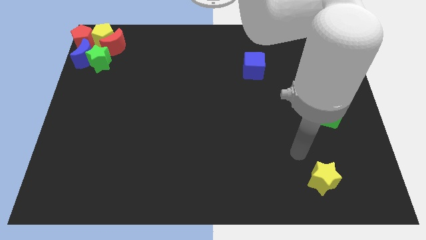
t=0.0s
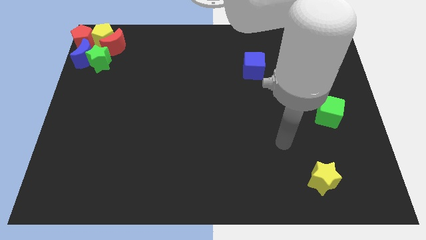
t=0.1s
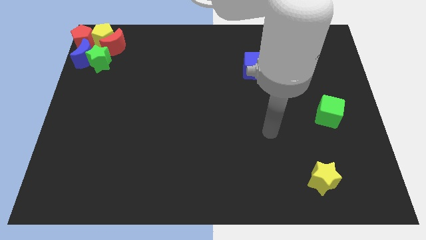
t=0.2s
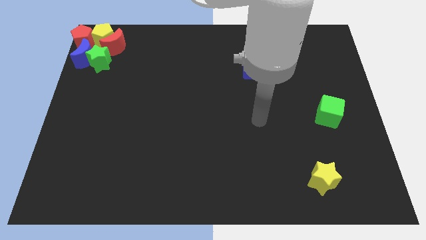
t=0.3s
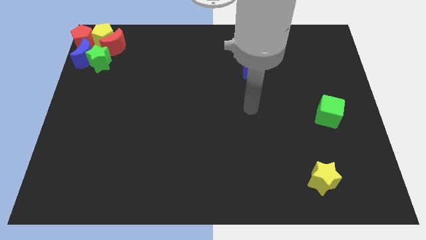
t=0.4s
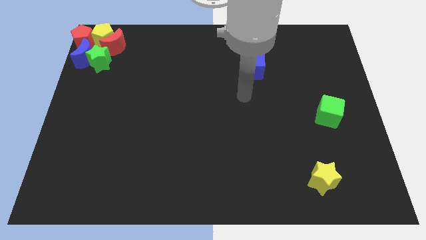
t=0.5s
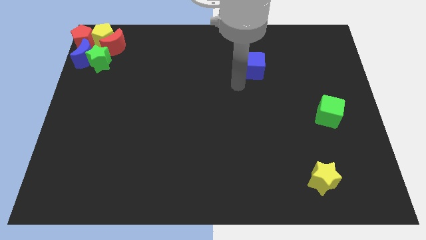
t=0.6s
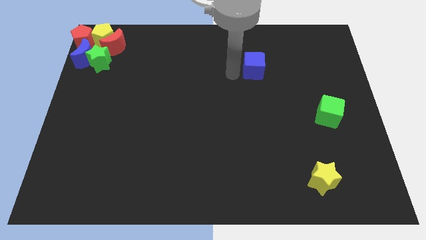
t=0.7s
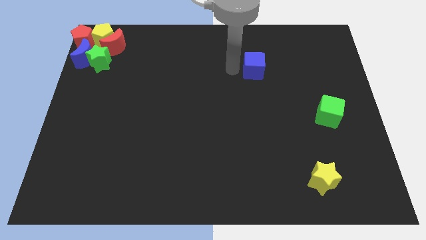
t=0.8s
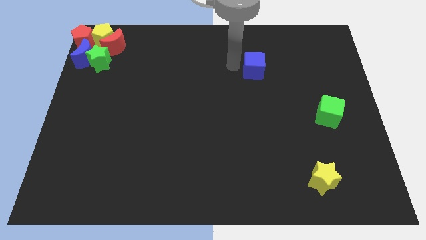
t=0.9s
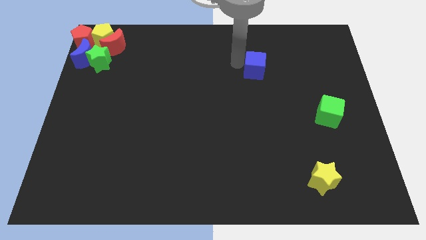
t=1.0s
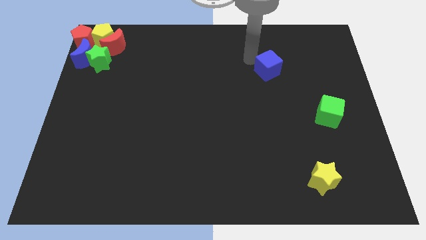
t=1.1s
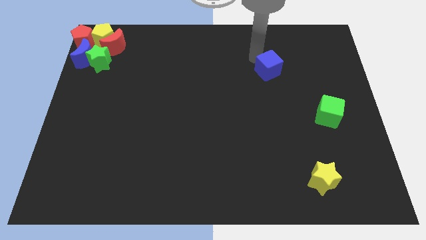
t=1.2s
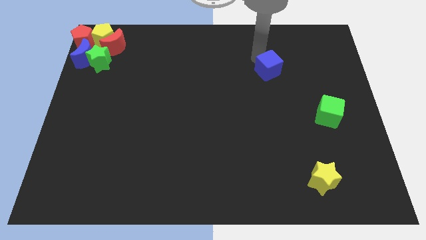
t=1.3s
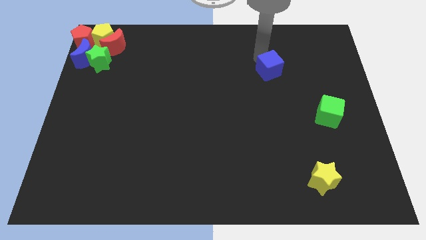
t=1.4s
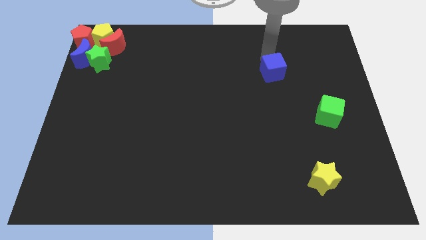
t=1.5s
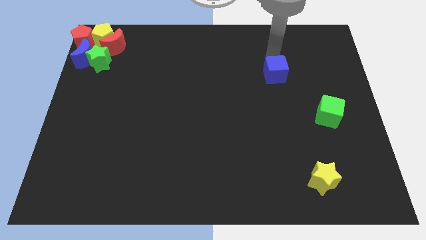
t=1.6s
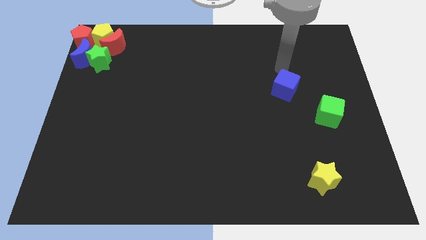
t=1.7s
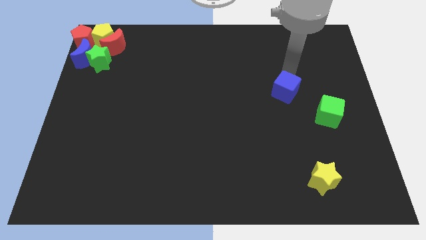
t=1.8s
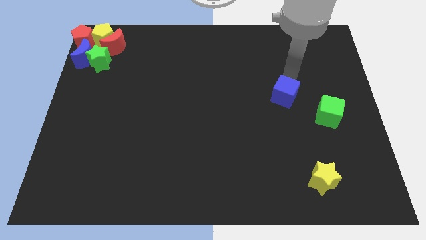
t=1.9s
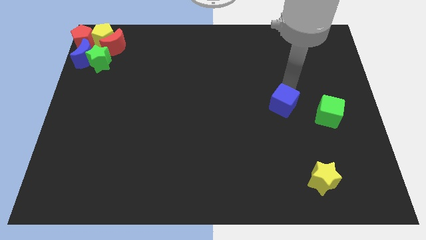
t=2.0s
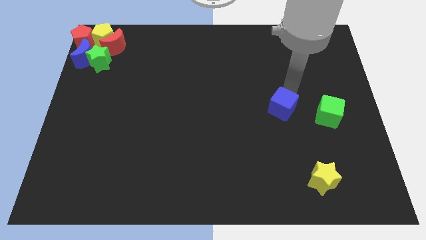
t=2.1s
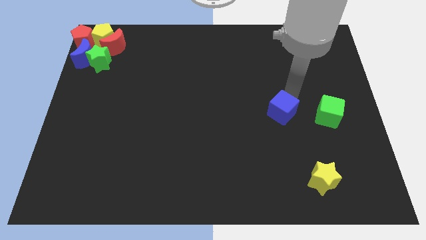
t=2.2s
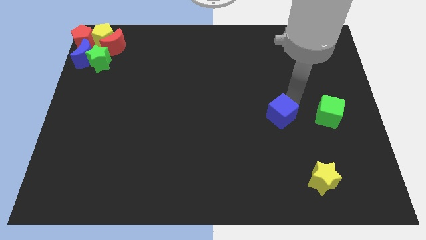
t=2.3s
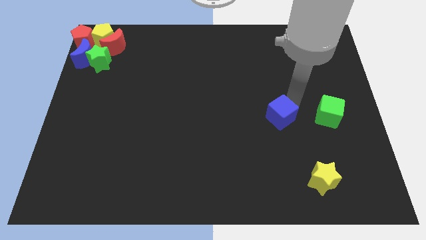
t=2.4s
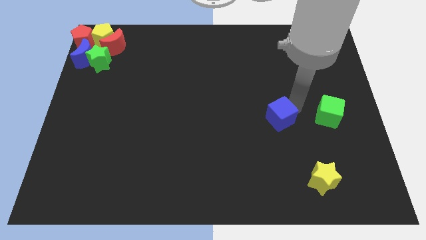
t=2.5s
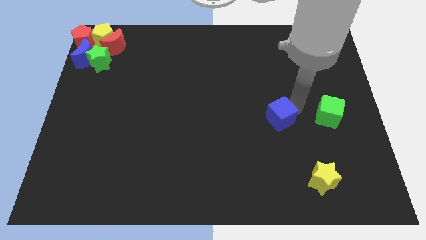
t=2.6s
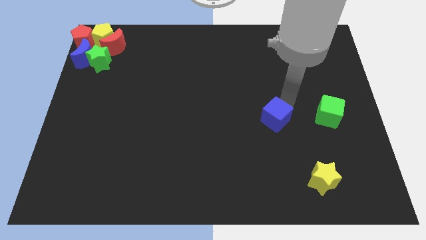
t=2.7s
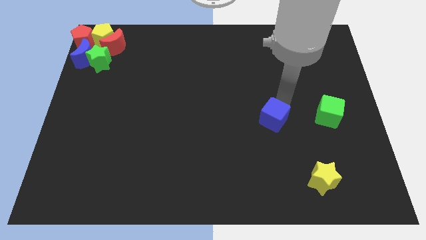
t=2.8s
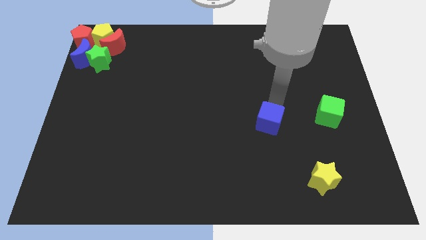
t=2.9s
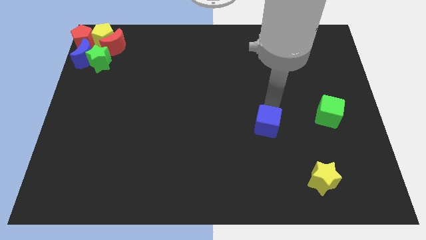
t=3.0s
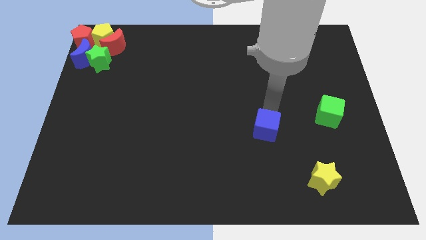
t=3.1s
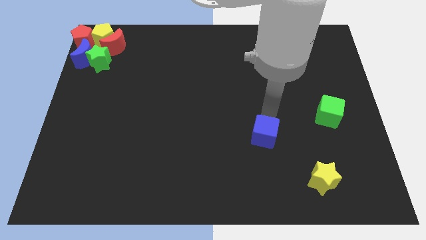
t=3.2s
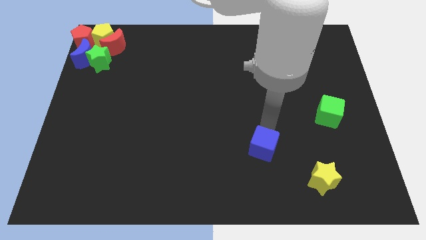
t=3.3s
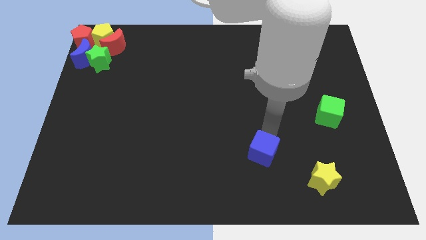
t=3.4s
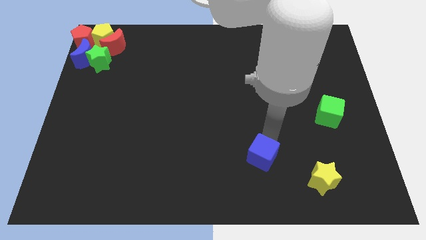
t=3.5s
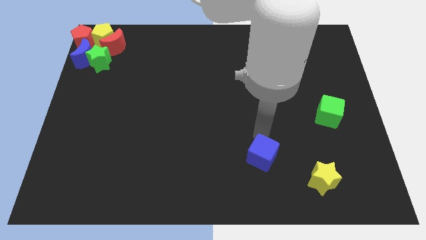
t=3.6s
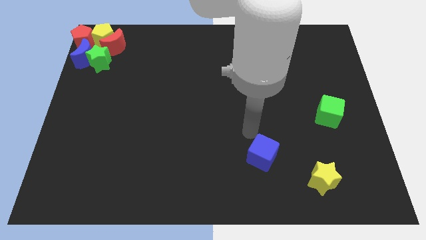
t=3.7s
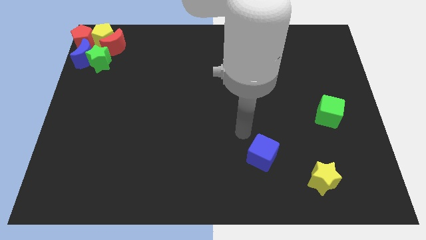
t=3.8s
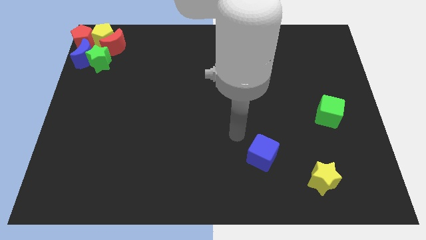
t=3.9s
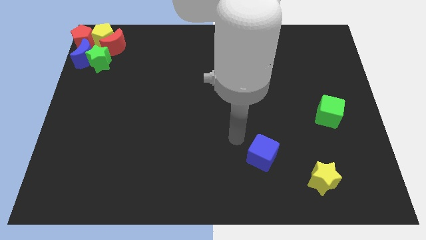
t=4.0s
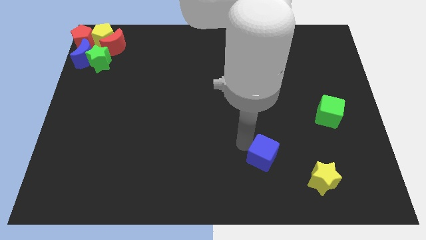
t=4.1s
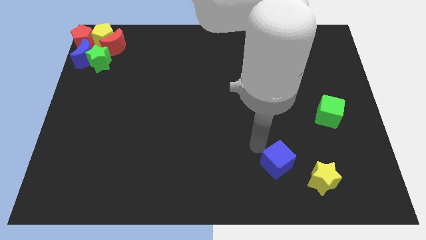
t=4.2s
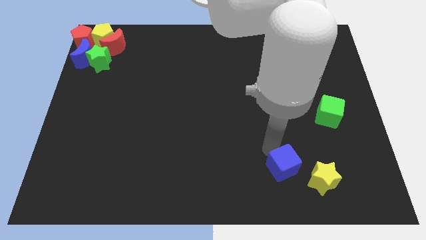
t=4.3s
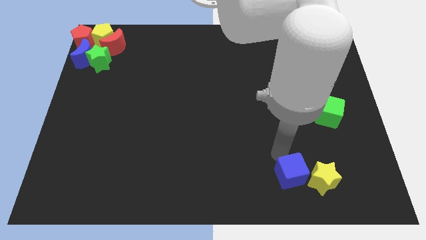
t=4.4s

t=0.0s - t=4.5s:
place the blue cube left to the yellow star

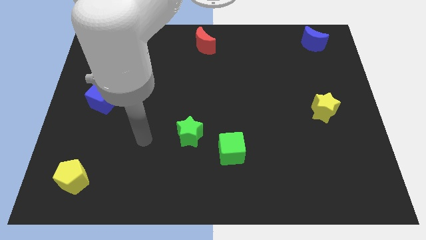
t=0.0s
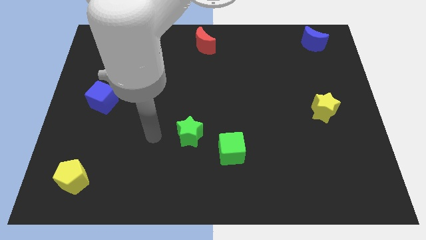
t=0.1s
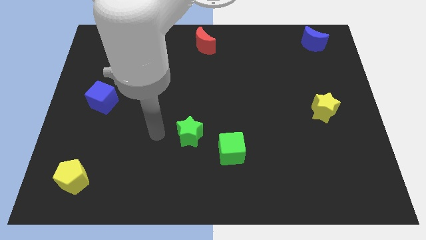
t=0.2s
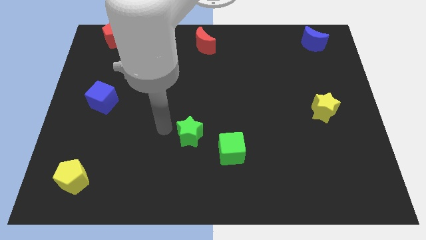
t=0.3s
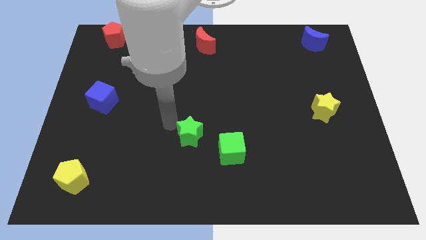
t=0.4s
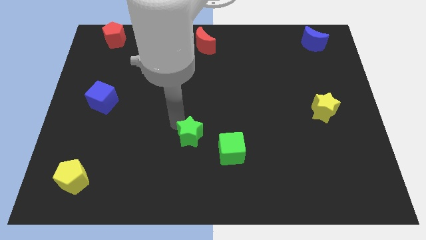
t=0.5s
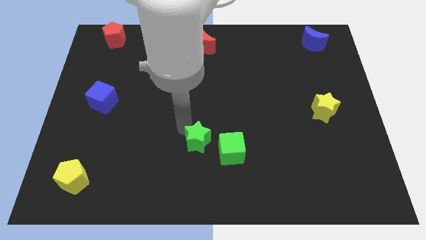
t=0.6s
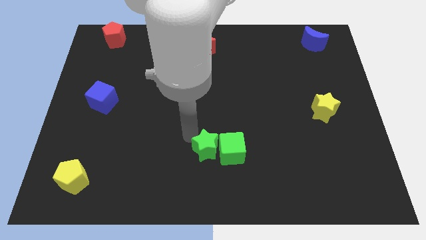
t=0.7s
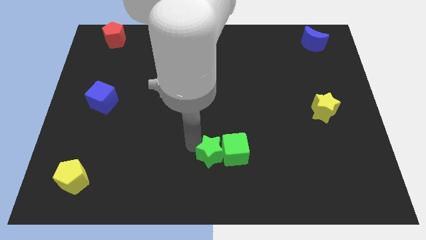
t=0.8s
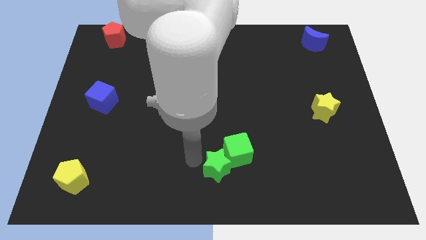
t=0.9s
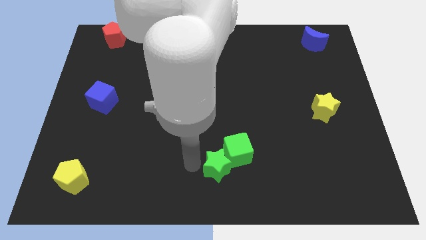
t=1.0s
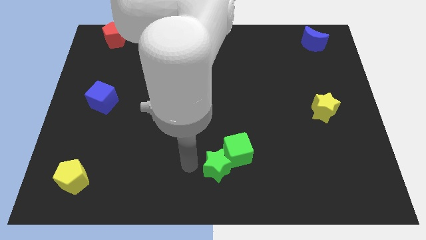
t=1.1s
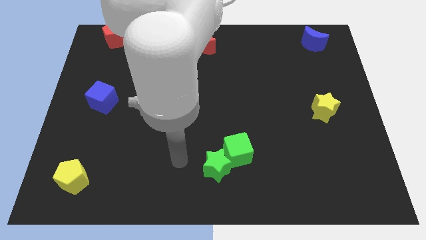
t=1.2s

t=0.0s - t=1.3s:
move the green star into the green cube

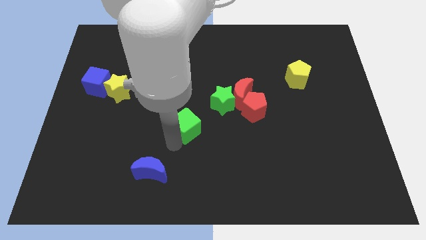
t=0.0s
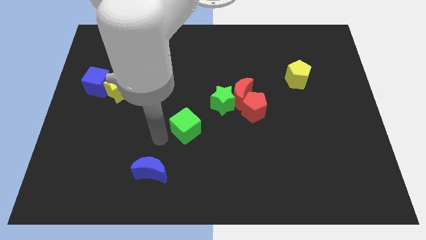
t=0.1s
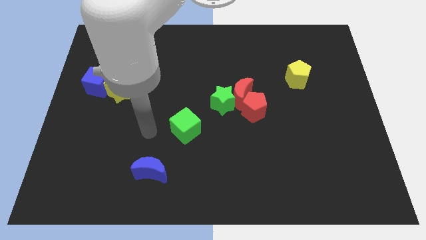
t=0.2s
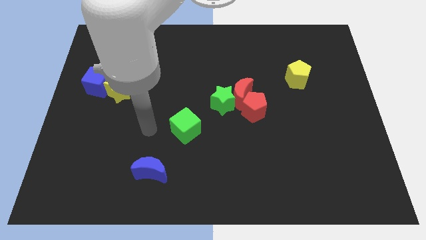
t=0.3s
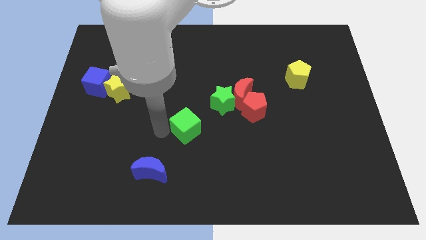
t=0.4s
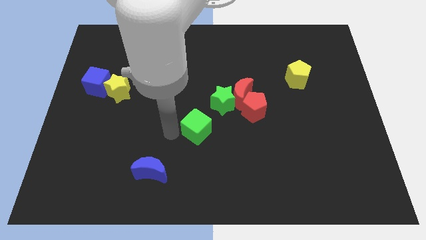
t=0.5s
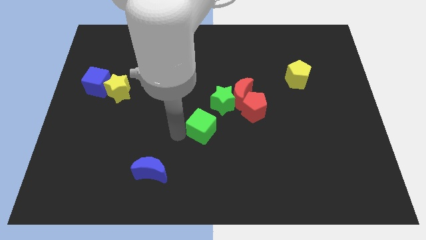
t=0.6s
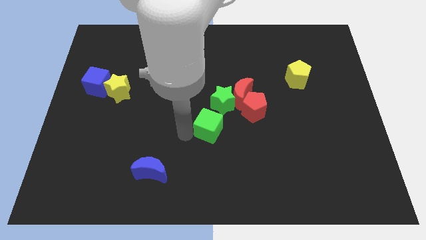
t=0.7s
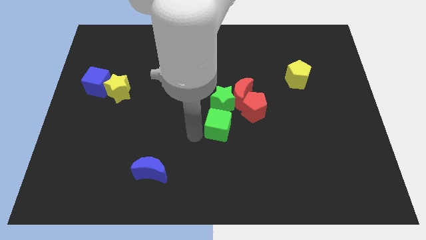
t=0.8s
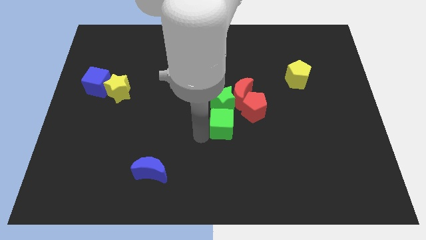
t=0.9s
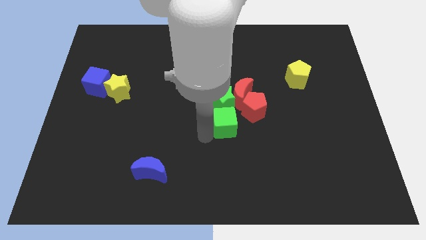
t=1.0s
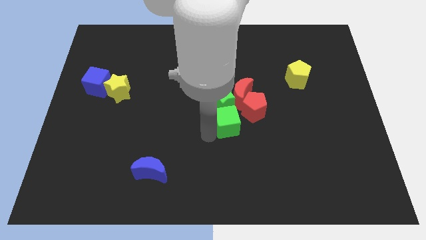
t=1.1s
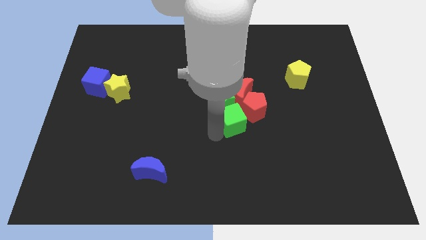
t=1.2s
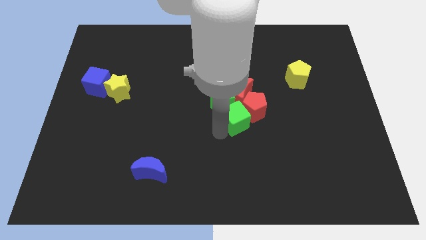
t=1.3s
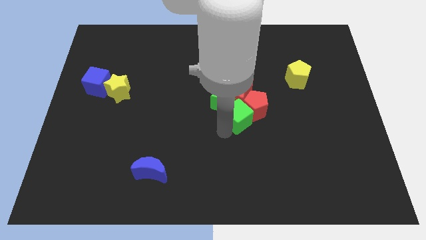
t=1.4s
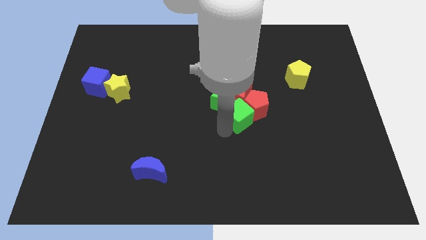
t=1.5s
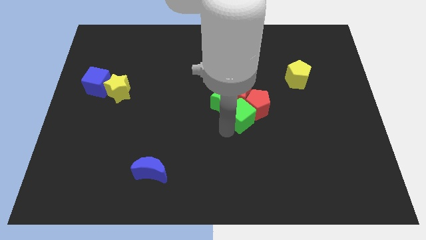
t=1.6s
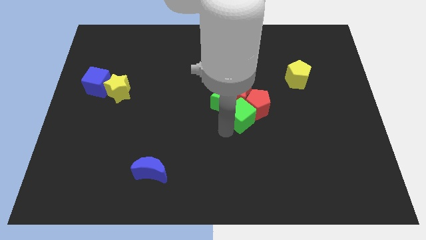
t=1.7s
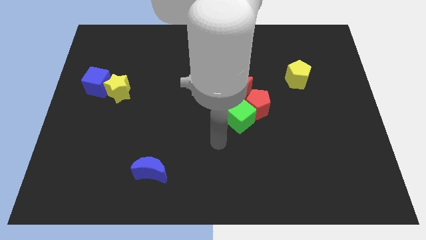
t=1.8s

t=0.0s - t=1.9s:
push the green cube into the red pentagon

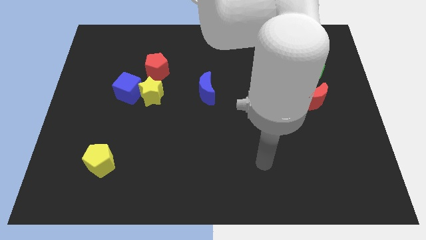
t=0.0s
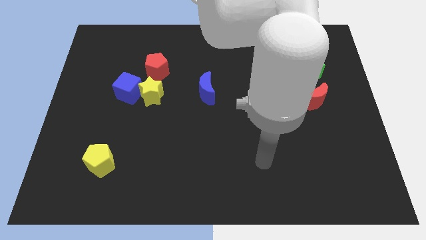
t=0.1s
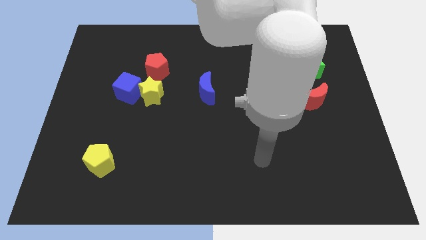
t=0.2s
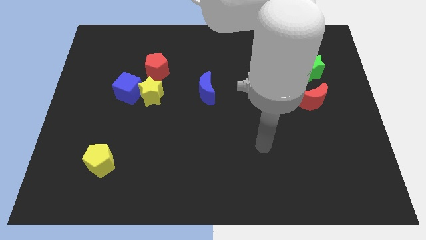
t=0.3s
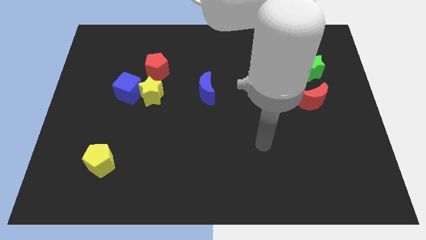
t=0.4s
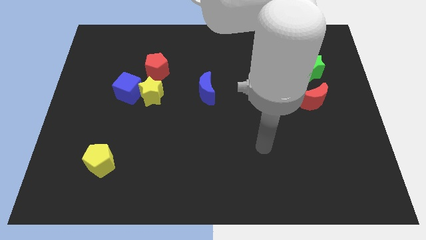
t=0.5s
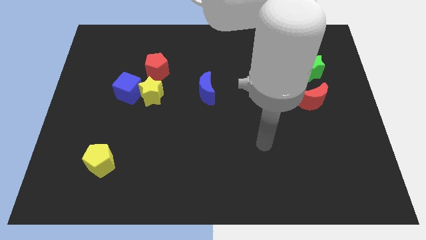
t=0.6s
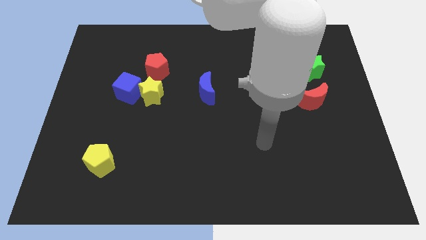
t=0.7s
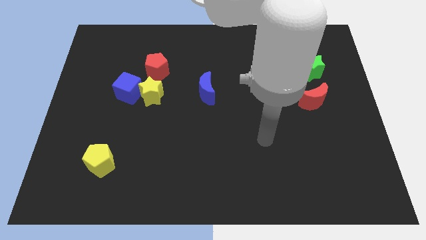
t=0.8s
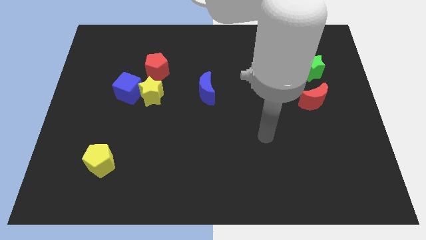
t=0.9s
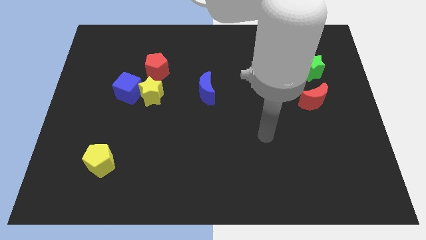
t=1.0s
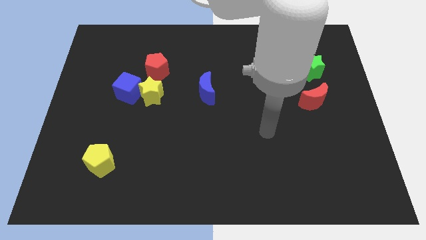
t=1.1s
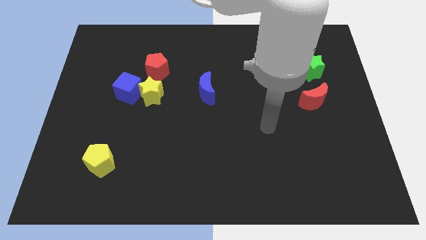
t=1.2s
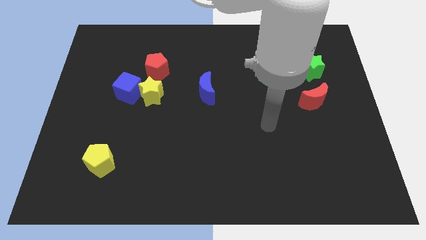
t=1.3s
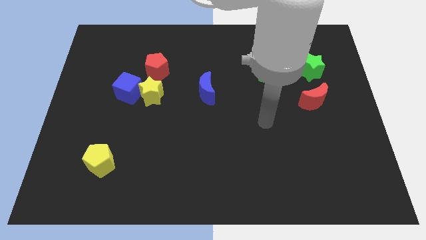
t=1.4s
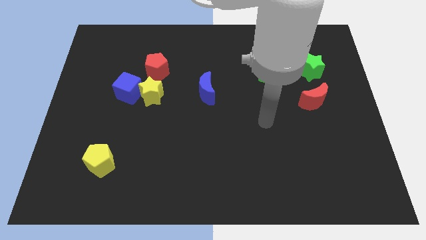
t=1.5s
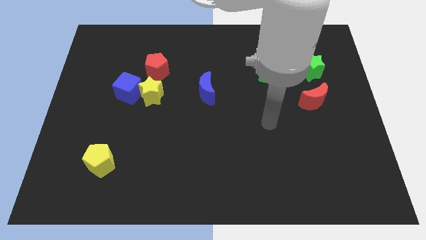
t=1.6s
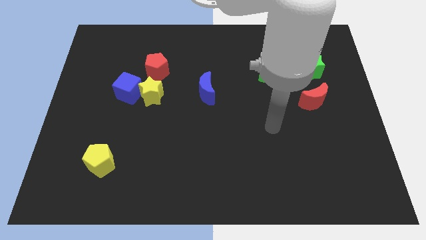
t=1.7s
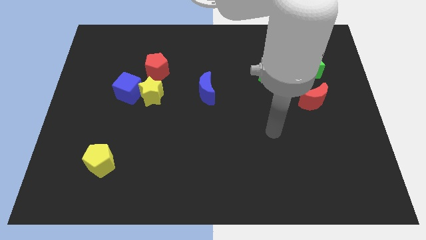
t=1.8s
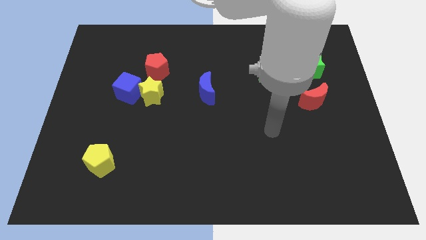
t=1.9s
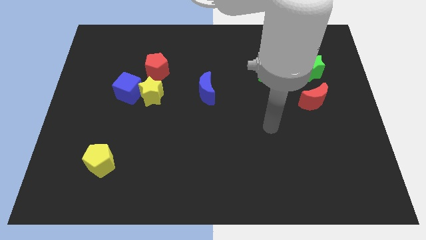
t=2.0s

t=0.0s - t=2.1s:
move your arm upwards
